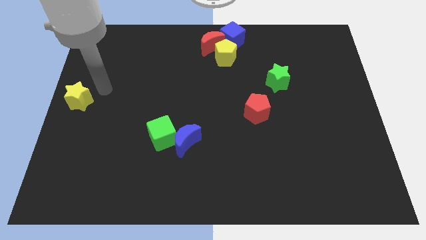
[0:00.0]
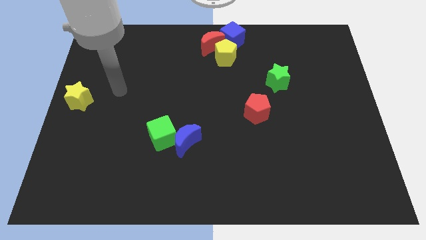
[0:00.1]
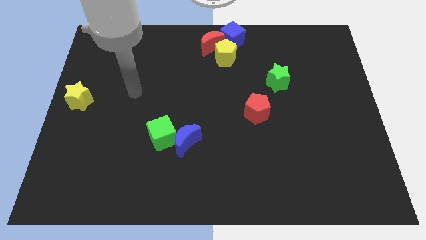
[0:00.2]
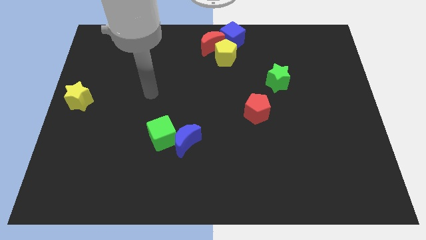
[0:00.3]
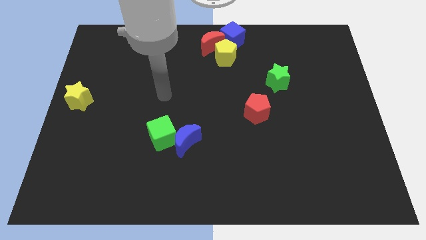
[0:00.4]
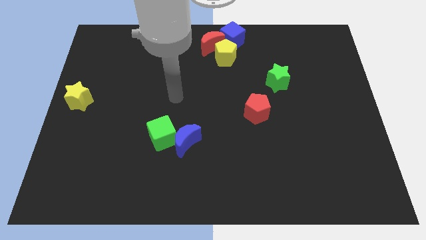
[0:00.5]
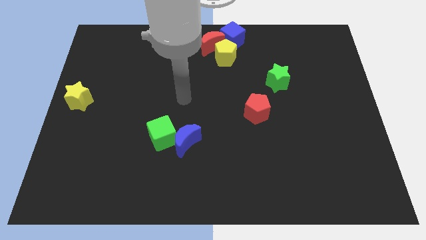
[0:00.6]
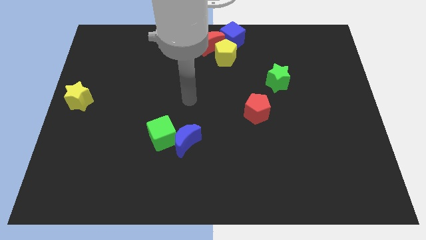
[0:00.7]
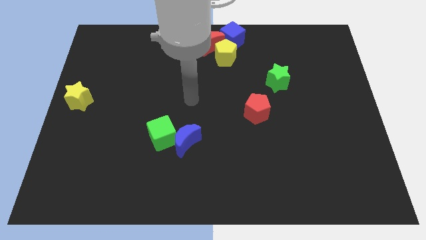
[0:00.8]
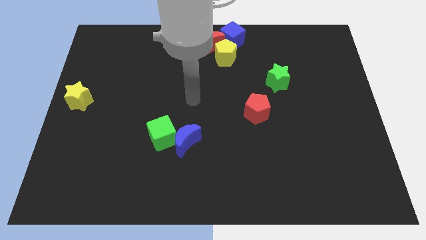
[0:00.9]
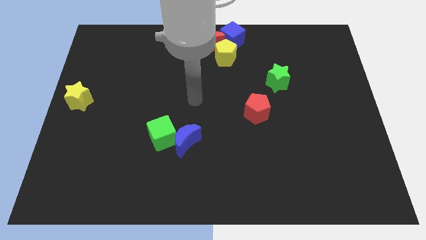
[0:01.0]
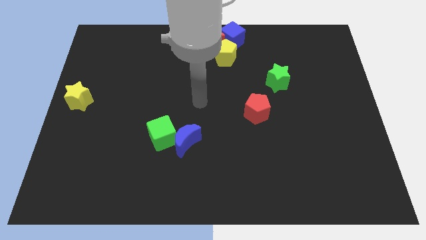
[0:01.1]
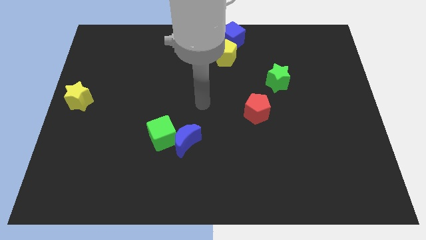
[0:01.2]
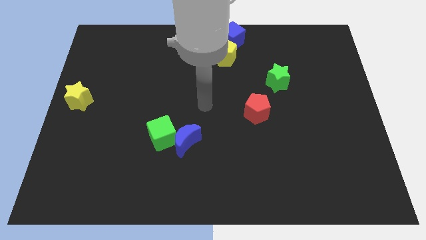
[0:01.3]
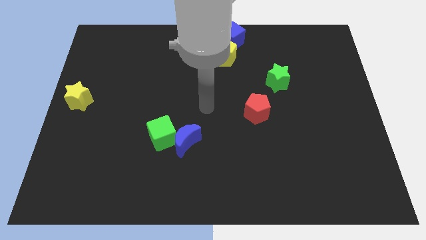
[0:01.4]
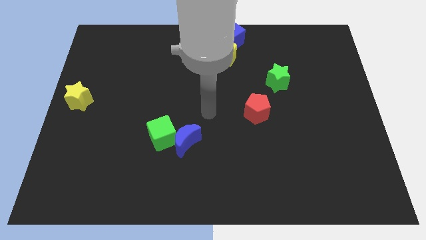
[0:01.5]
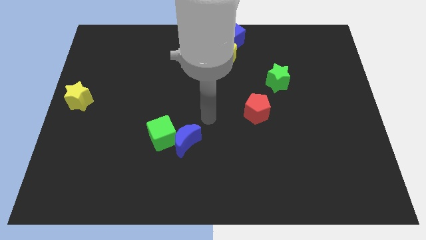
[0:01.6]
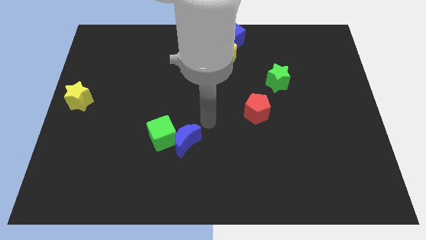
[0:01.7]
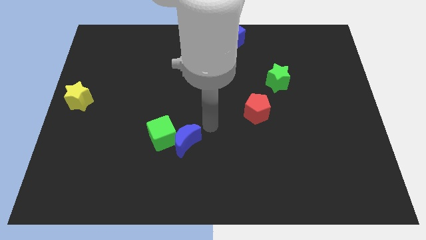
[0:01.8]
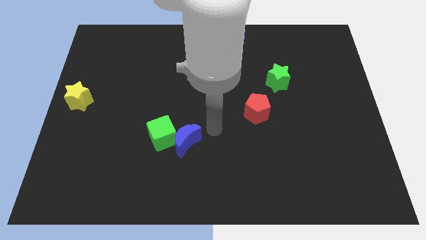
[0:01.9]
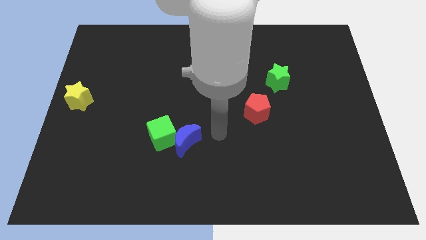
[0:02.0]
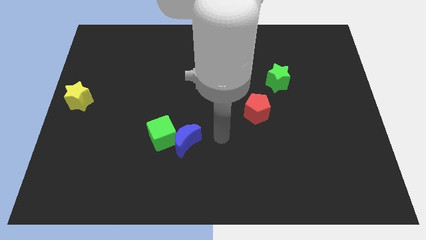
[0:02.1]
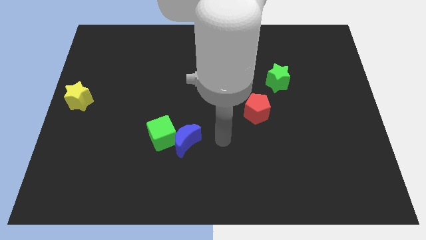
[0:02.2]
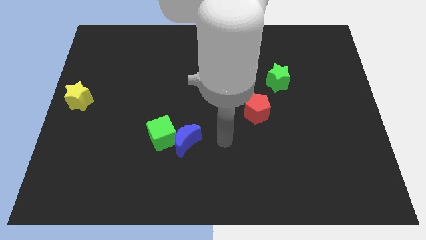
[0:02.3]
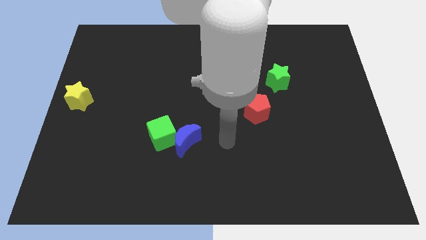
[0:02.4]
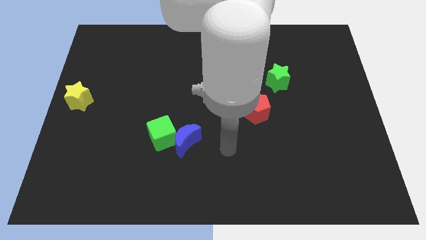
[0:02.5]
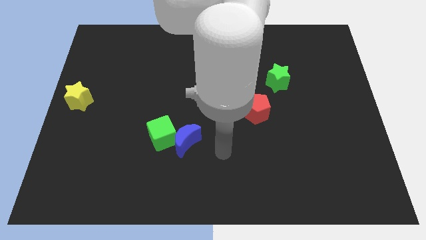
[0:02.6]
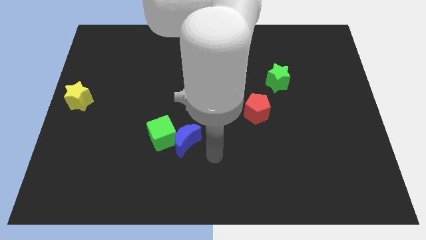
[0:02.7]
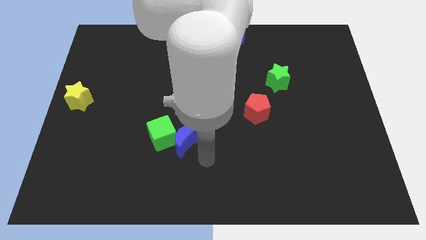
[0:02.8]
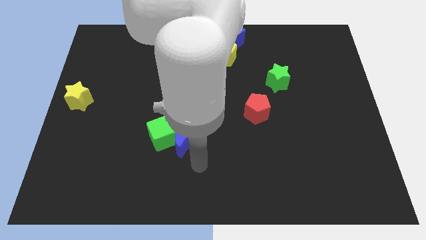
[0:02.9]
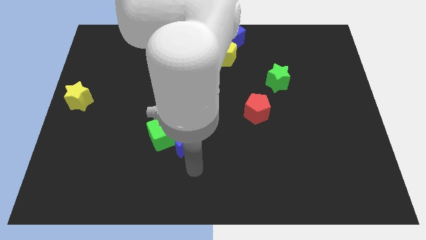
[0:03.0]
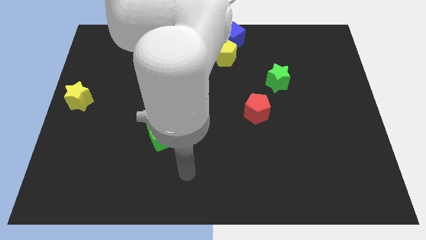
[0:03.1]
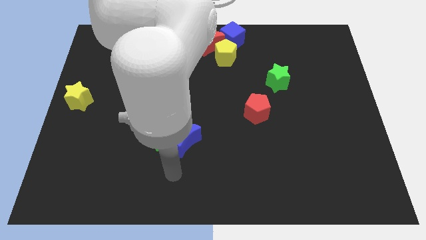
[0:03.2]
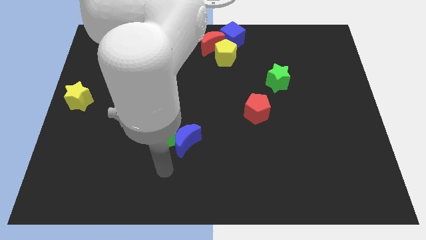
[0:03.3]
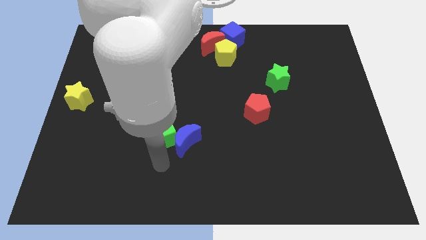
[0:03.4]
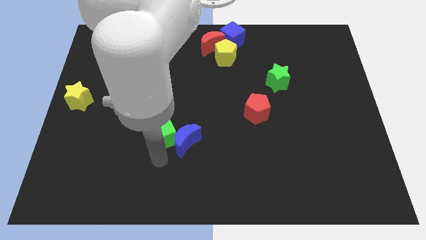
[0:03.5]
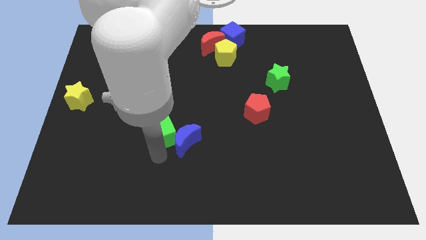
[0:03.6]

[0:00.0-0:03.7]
point the arm at the bottom side of the green cube
